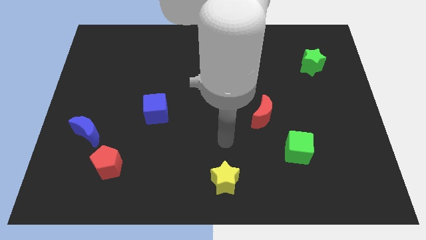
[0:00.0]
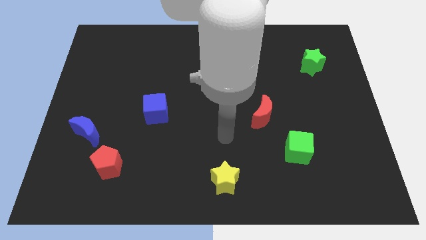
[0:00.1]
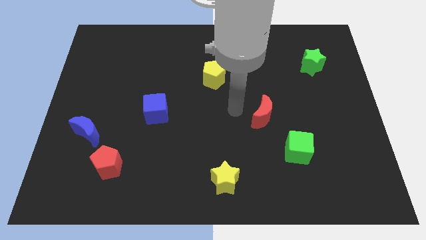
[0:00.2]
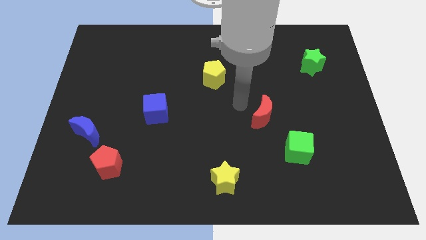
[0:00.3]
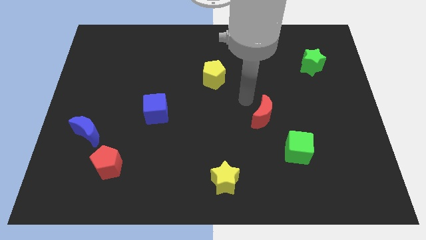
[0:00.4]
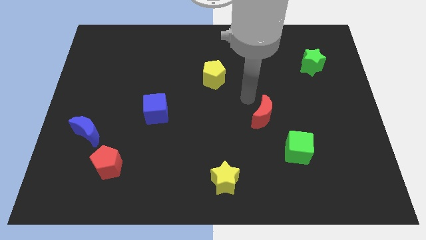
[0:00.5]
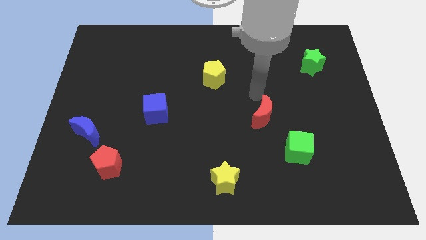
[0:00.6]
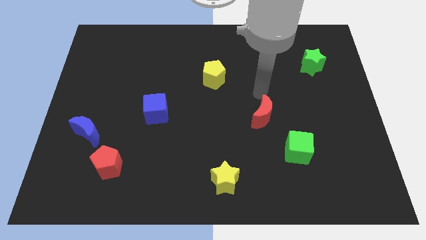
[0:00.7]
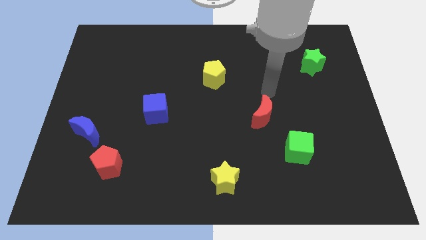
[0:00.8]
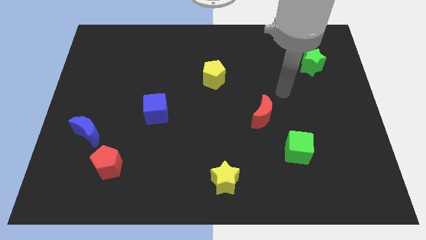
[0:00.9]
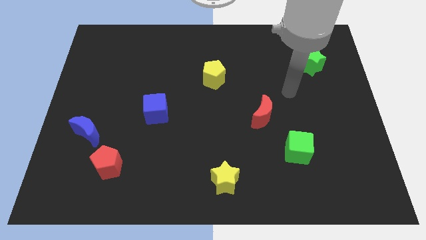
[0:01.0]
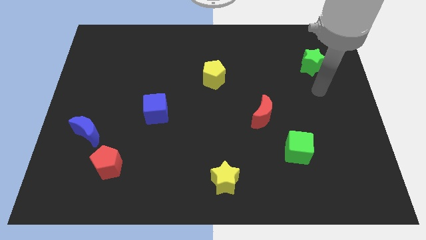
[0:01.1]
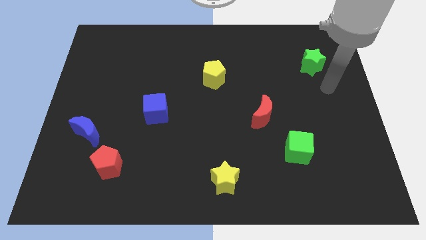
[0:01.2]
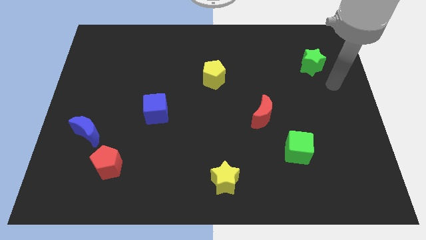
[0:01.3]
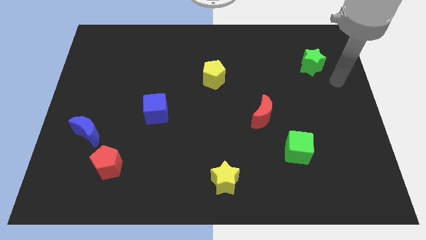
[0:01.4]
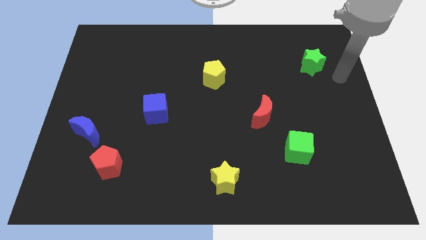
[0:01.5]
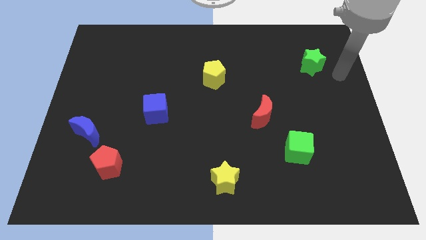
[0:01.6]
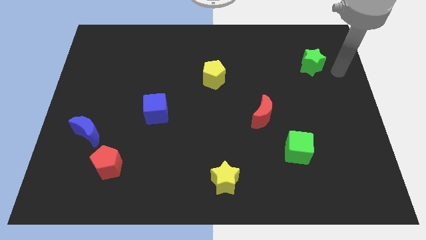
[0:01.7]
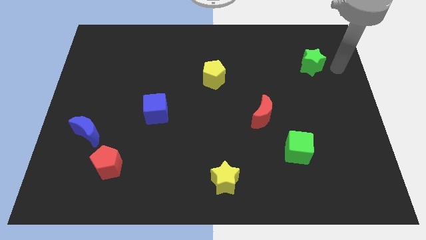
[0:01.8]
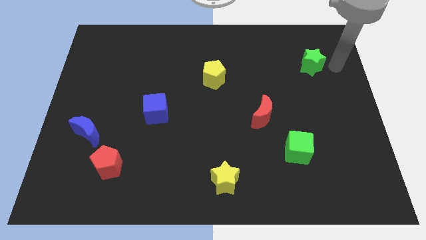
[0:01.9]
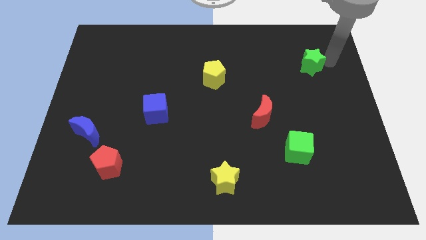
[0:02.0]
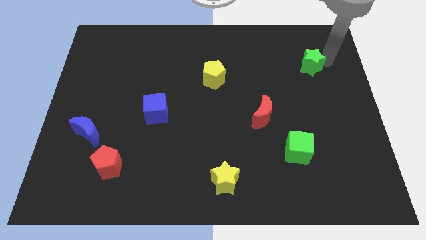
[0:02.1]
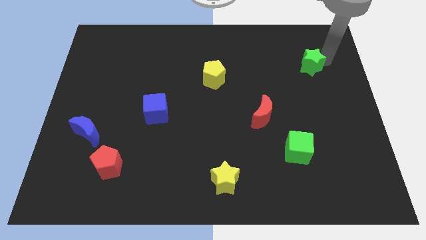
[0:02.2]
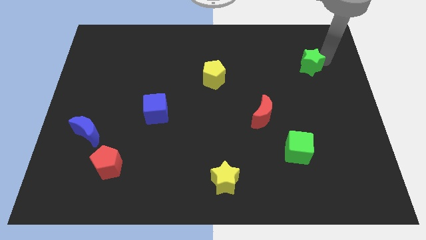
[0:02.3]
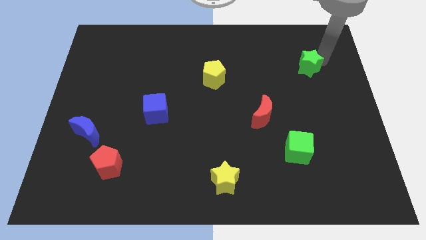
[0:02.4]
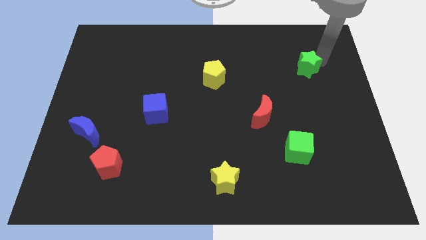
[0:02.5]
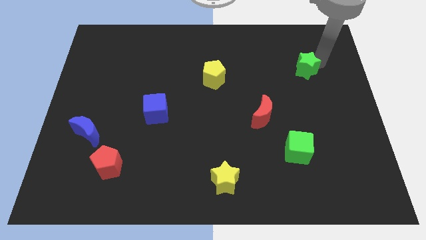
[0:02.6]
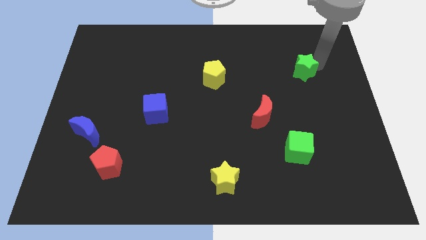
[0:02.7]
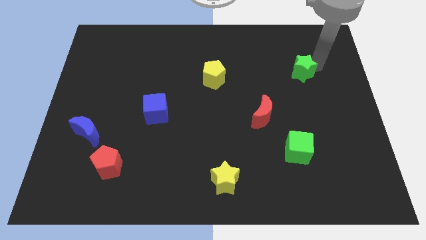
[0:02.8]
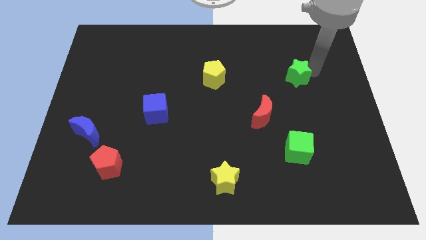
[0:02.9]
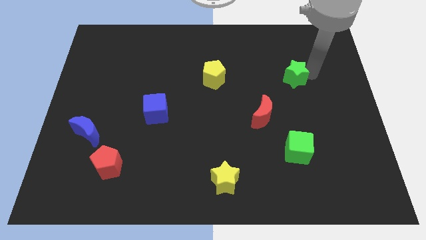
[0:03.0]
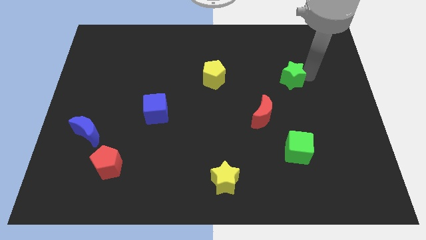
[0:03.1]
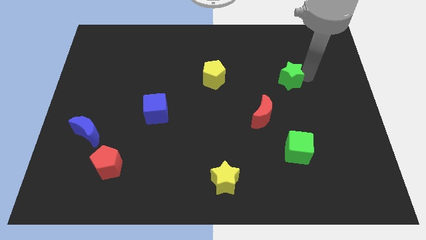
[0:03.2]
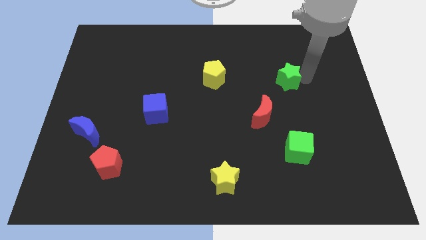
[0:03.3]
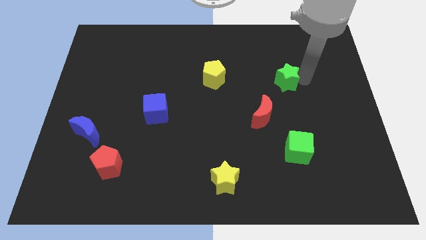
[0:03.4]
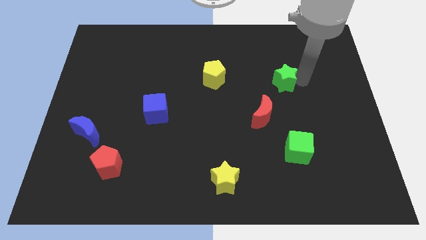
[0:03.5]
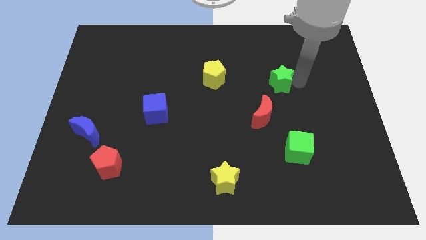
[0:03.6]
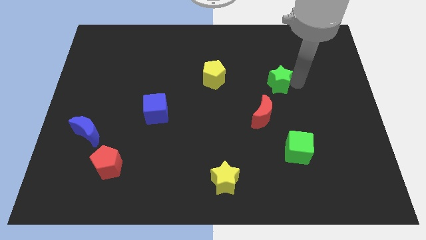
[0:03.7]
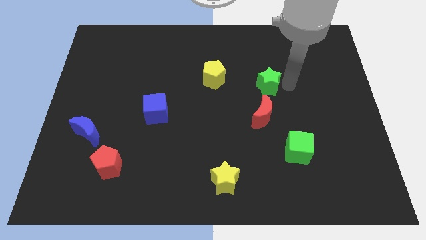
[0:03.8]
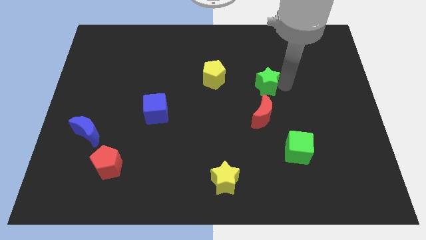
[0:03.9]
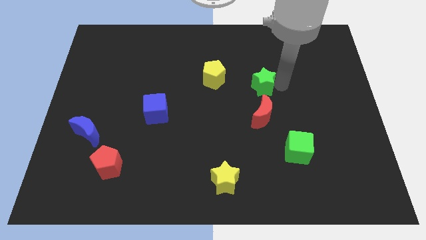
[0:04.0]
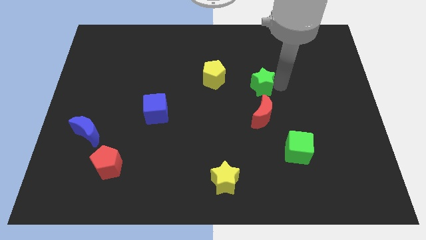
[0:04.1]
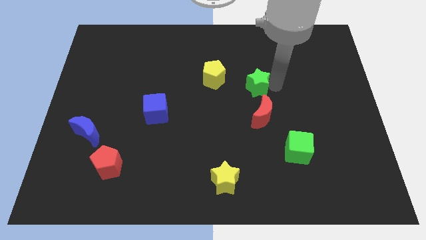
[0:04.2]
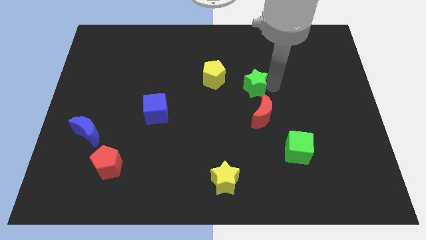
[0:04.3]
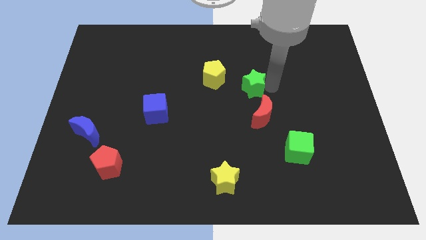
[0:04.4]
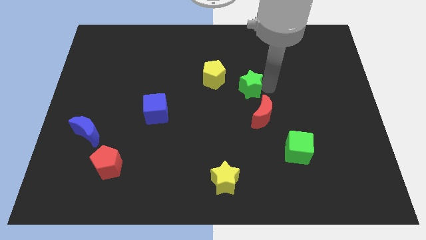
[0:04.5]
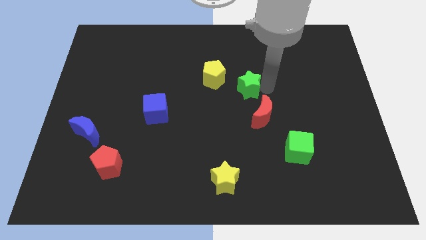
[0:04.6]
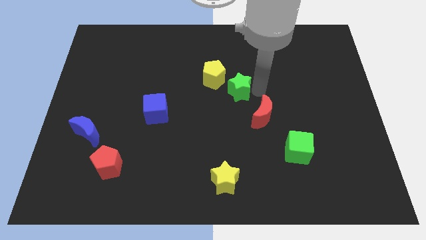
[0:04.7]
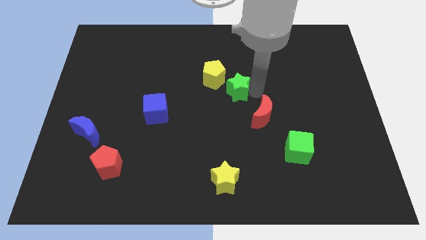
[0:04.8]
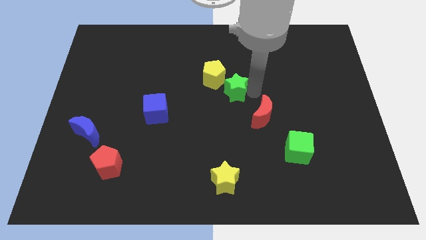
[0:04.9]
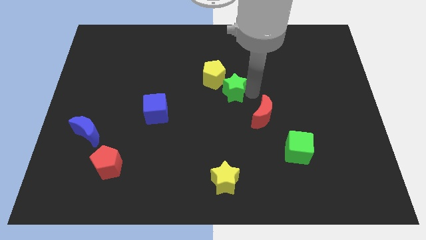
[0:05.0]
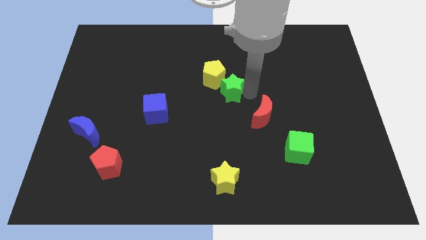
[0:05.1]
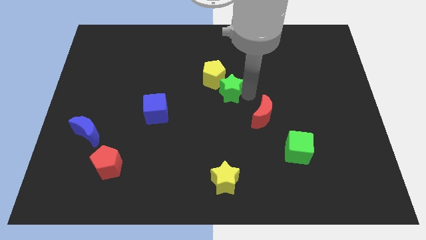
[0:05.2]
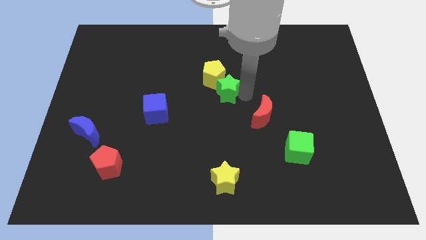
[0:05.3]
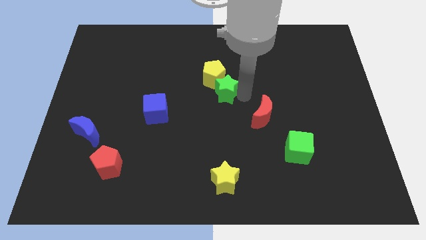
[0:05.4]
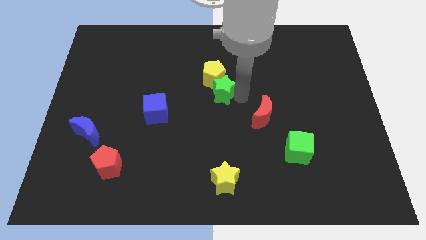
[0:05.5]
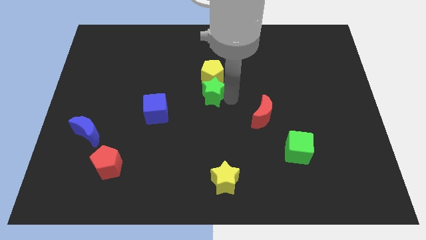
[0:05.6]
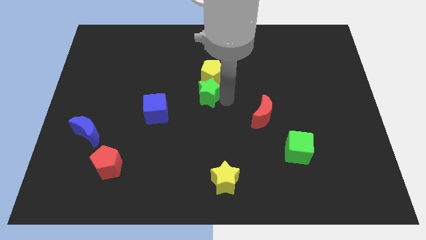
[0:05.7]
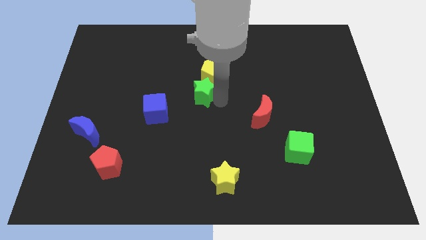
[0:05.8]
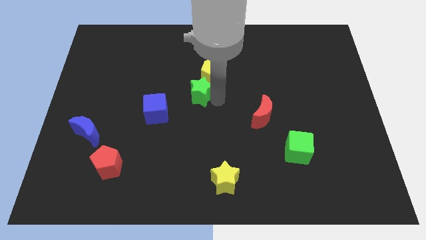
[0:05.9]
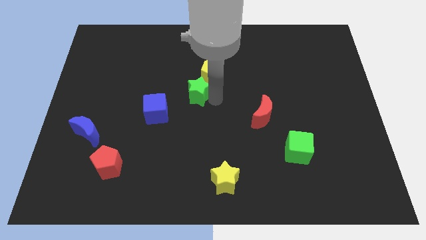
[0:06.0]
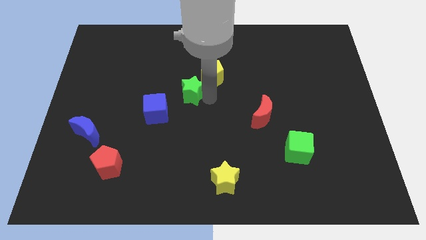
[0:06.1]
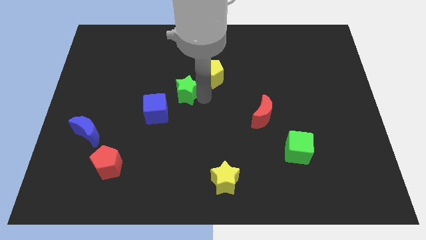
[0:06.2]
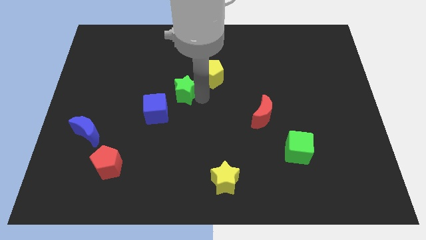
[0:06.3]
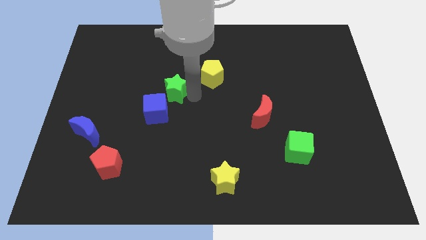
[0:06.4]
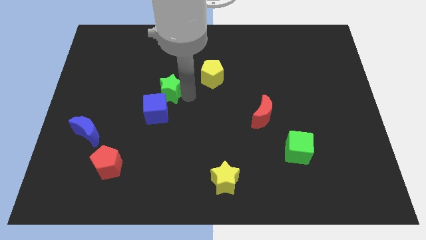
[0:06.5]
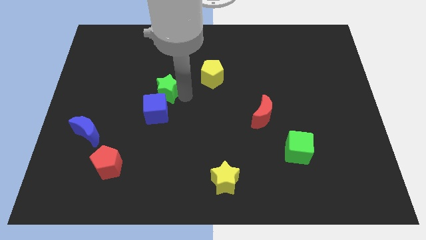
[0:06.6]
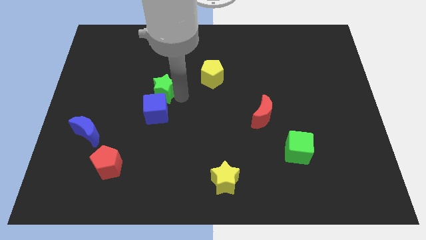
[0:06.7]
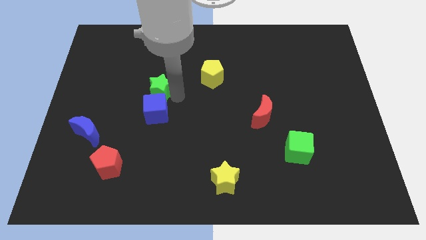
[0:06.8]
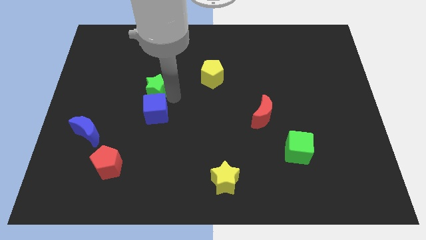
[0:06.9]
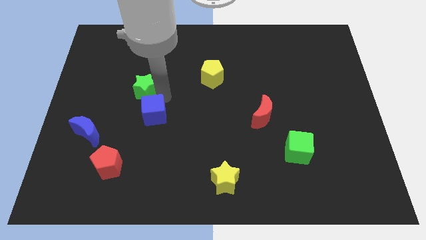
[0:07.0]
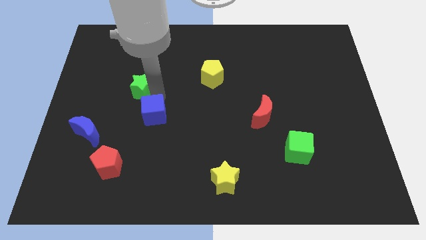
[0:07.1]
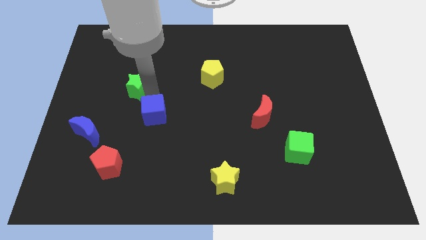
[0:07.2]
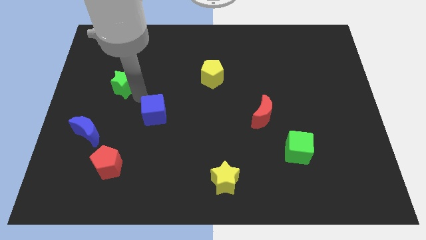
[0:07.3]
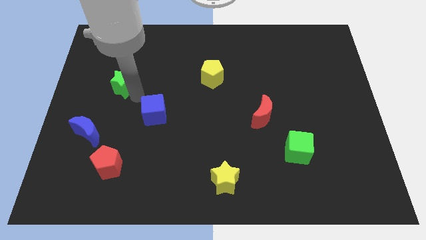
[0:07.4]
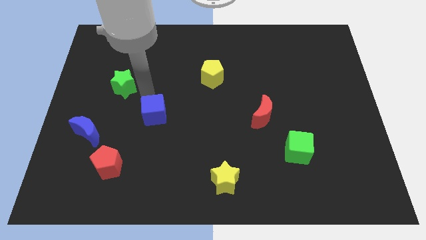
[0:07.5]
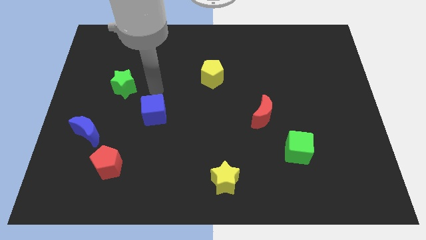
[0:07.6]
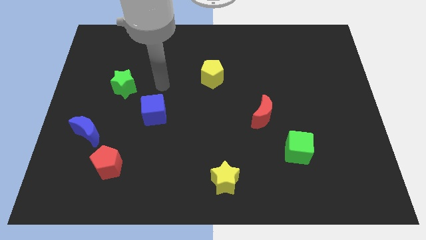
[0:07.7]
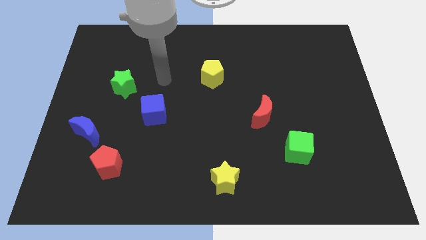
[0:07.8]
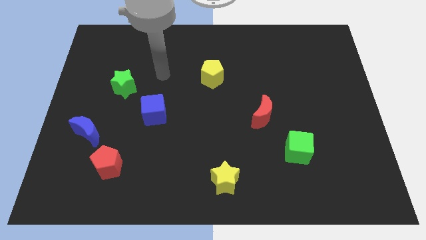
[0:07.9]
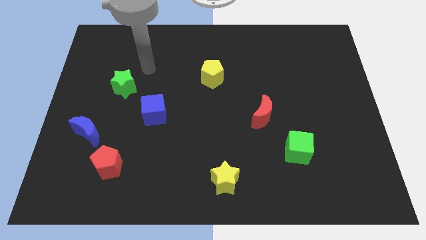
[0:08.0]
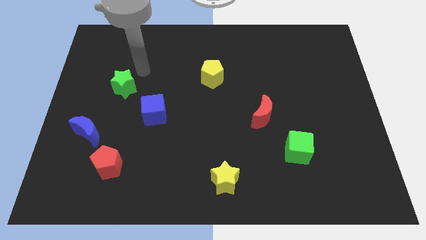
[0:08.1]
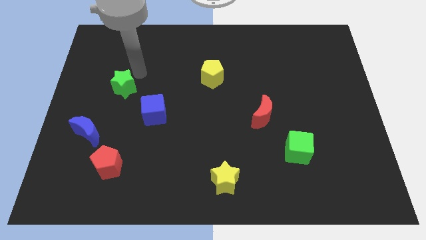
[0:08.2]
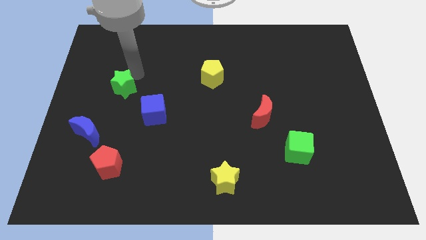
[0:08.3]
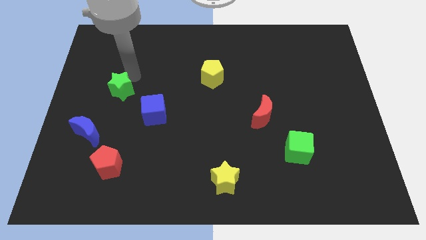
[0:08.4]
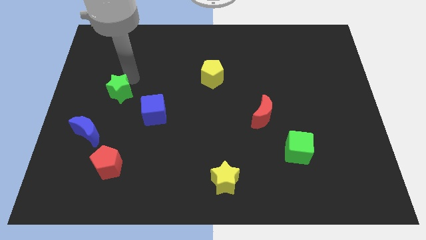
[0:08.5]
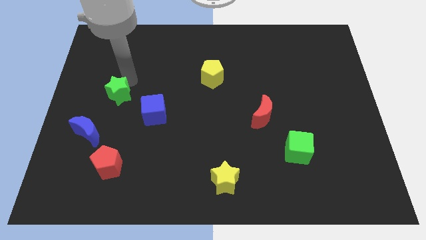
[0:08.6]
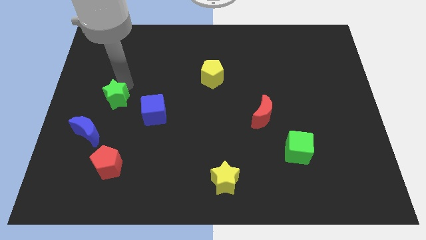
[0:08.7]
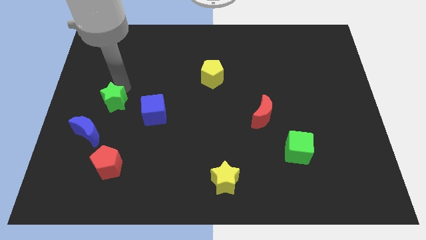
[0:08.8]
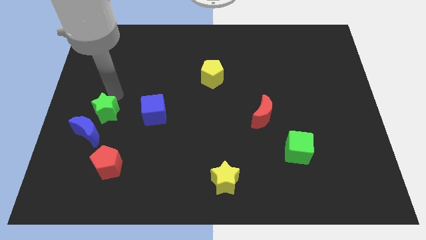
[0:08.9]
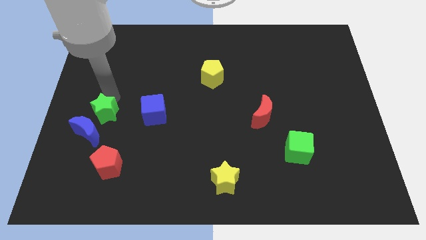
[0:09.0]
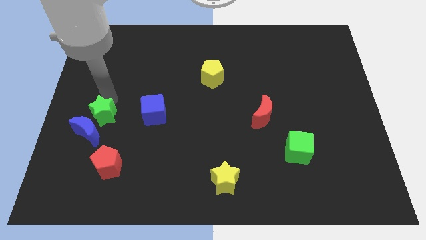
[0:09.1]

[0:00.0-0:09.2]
push the green star close to the blue moon
